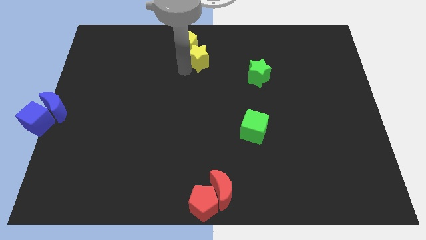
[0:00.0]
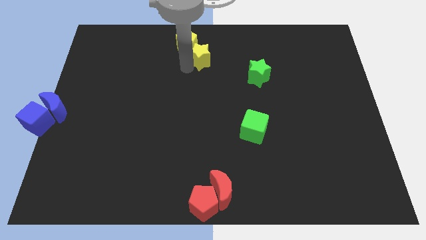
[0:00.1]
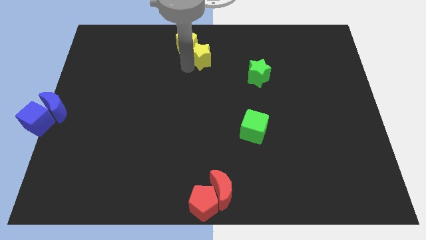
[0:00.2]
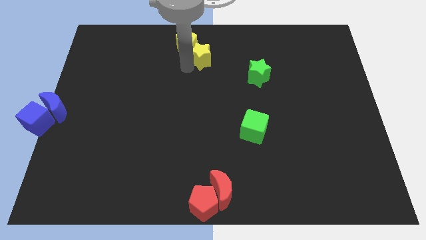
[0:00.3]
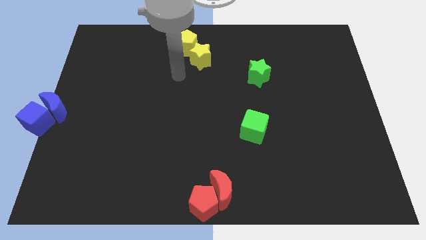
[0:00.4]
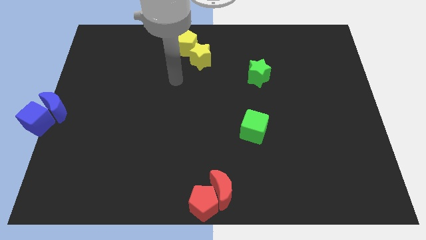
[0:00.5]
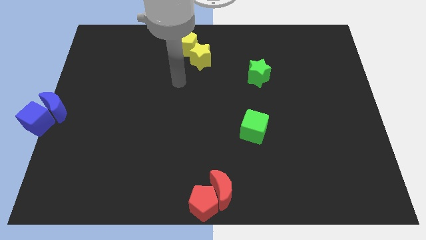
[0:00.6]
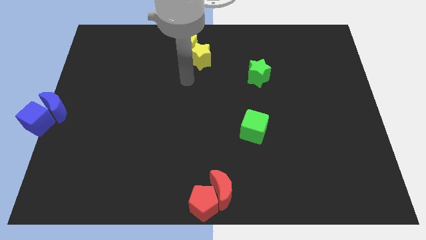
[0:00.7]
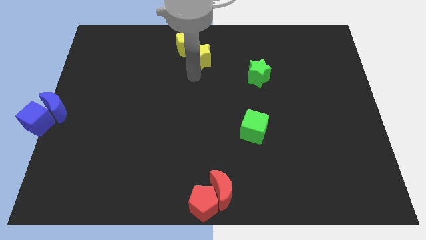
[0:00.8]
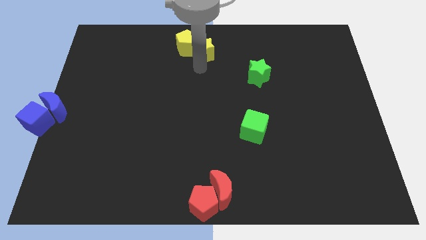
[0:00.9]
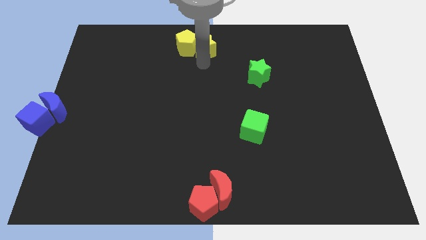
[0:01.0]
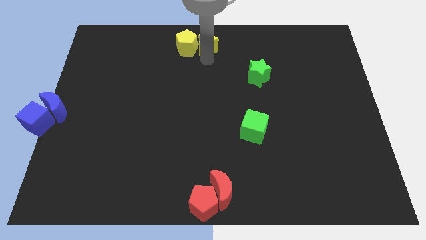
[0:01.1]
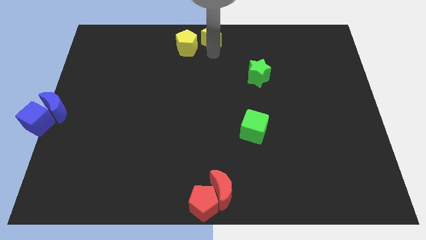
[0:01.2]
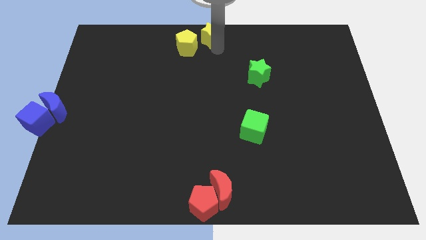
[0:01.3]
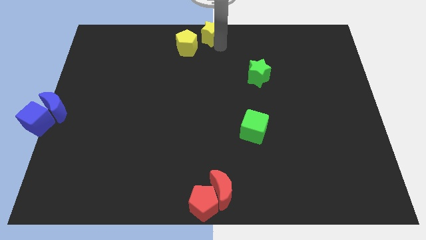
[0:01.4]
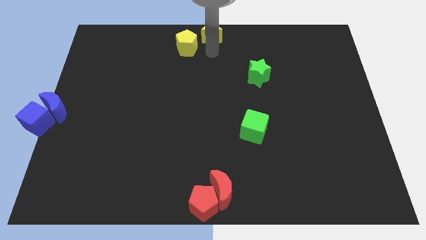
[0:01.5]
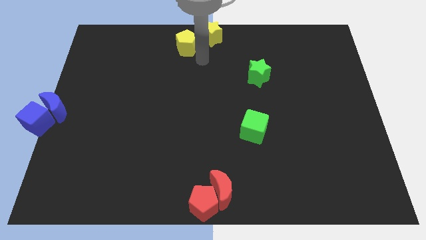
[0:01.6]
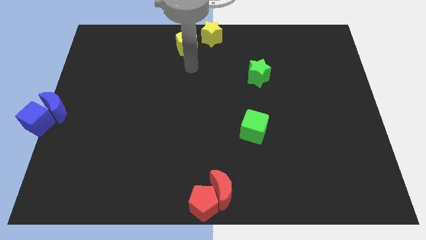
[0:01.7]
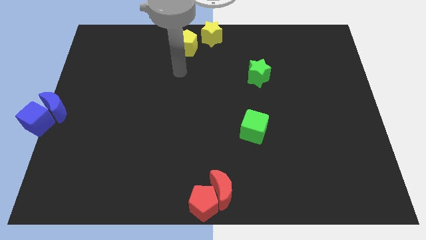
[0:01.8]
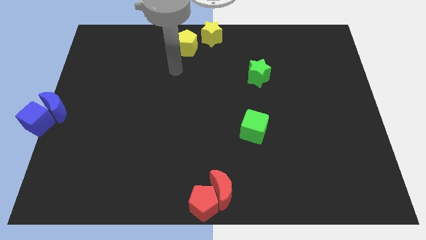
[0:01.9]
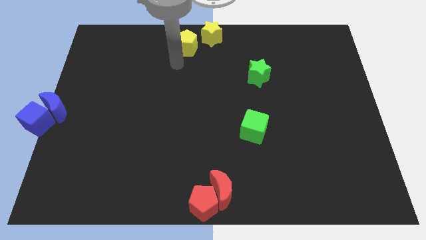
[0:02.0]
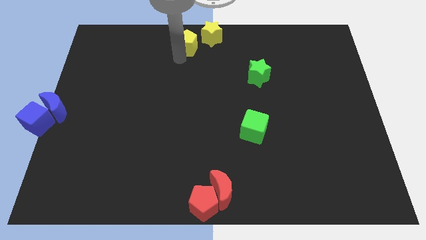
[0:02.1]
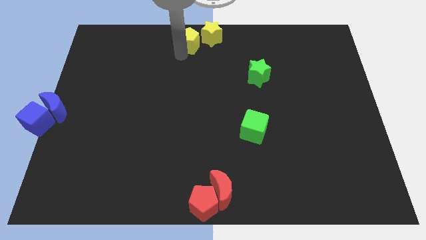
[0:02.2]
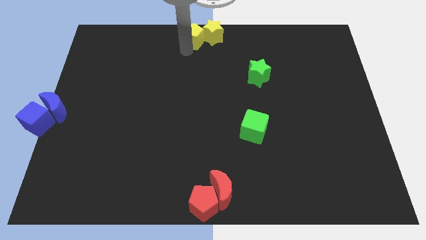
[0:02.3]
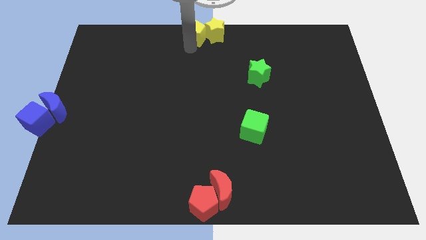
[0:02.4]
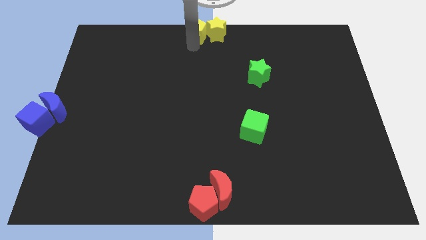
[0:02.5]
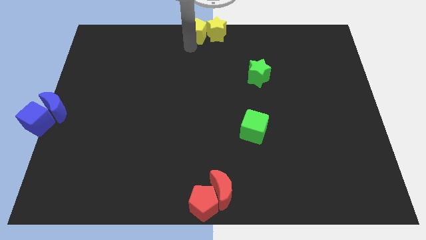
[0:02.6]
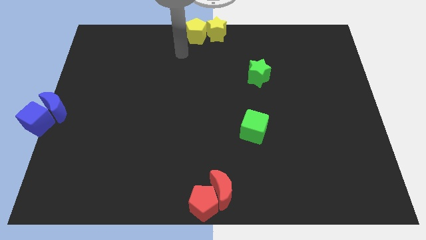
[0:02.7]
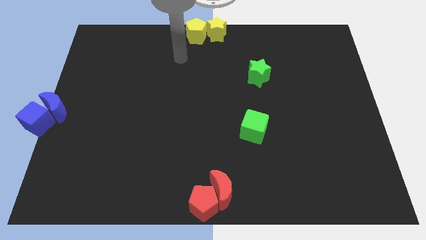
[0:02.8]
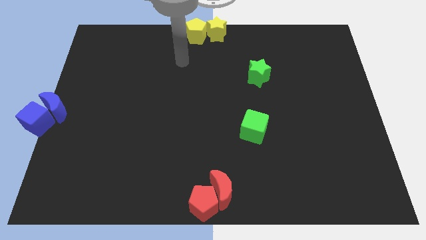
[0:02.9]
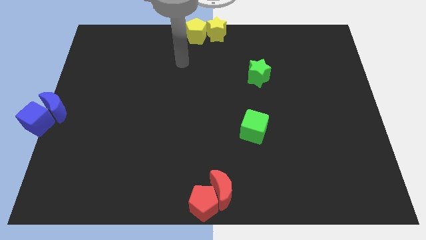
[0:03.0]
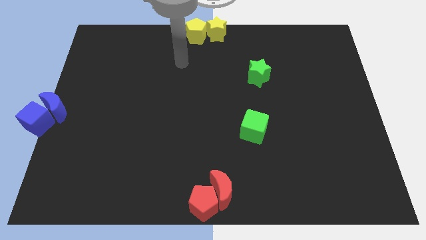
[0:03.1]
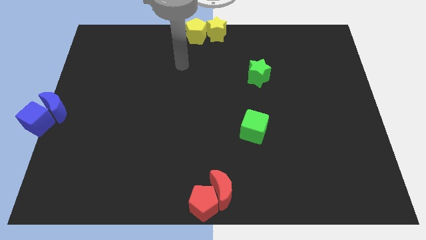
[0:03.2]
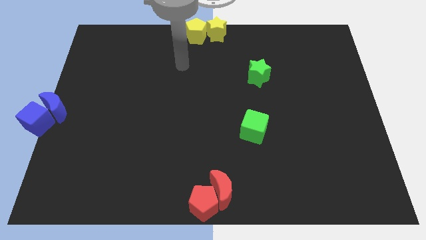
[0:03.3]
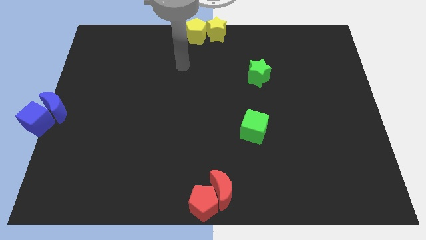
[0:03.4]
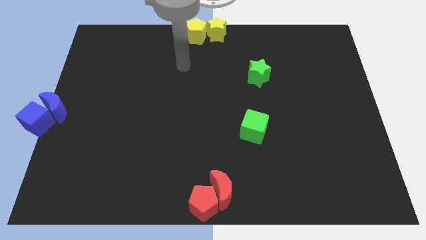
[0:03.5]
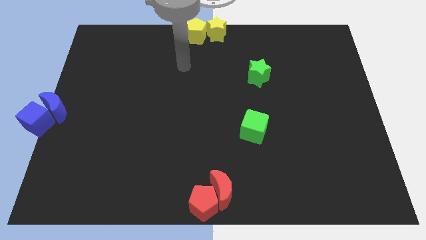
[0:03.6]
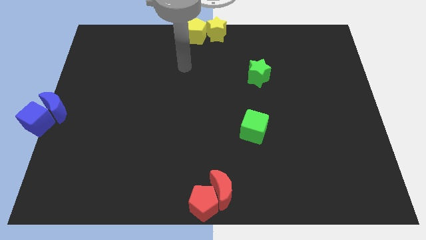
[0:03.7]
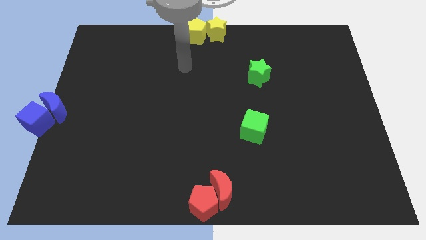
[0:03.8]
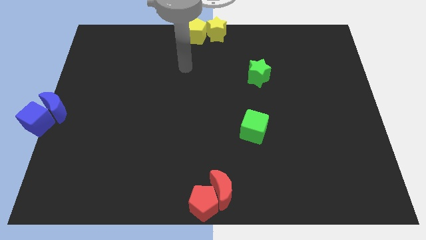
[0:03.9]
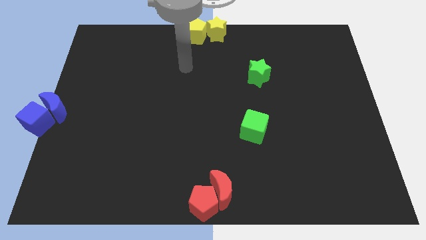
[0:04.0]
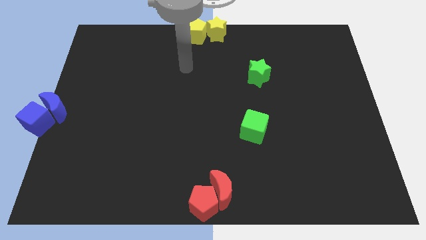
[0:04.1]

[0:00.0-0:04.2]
move the yellow blocks to the top center of the board

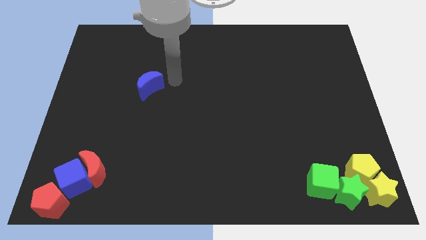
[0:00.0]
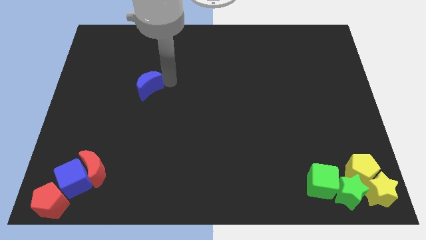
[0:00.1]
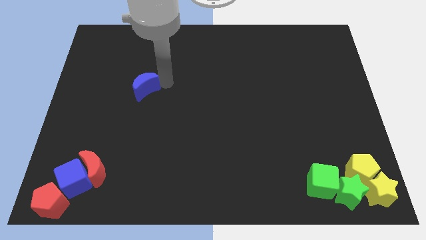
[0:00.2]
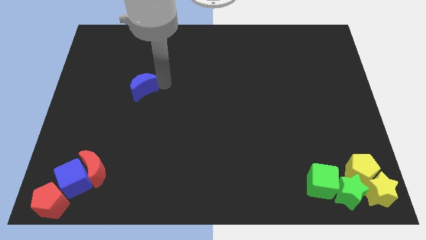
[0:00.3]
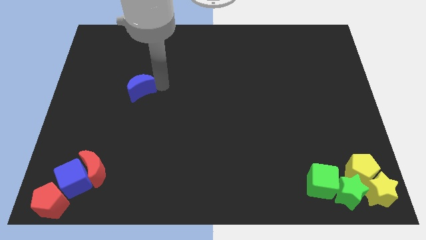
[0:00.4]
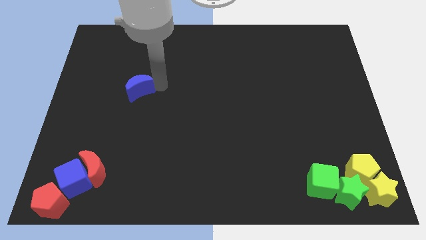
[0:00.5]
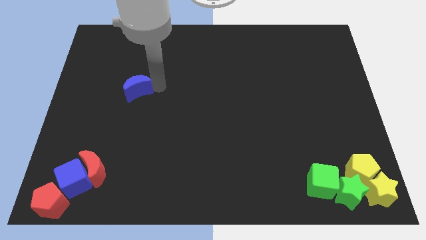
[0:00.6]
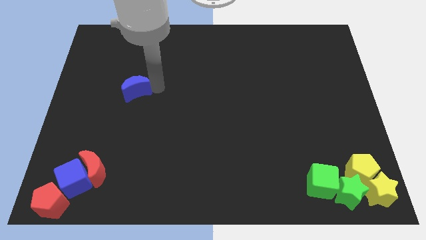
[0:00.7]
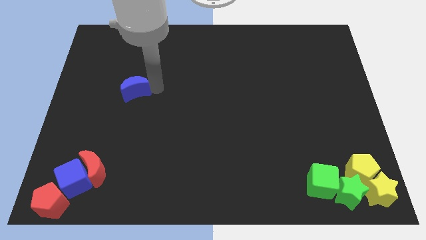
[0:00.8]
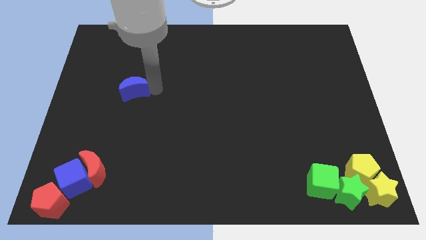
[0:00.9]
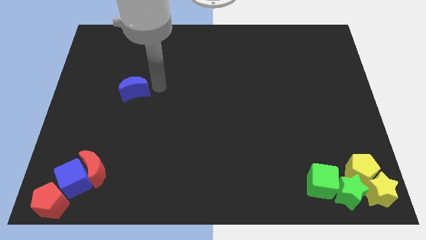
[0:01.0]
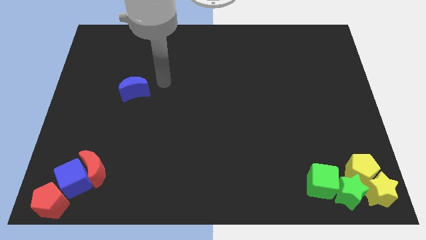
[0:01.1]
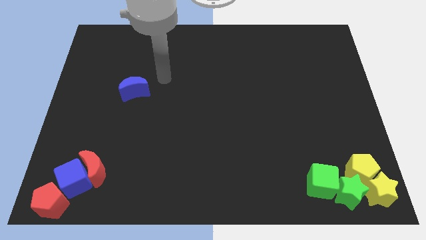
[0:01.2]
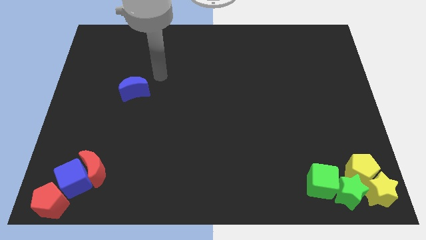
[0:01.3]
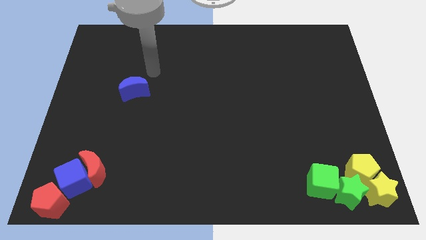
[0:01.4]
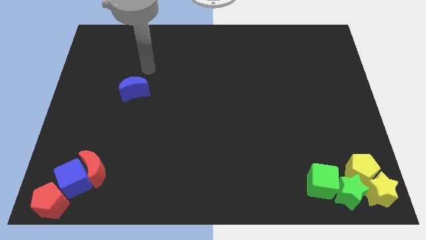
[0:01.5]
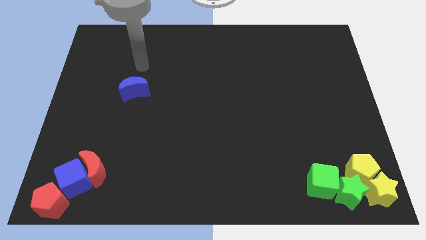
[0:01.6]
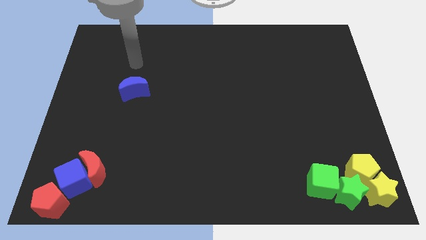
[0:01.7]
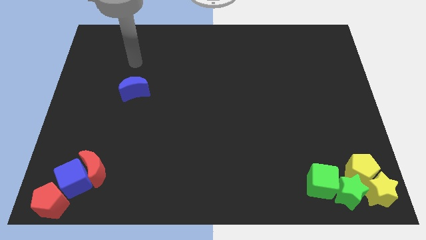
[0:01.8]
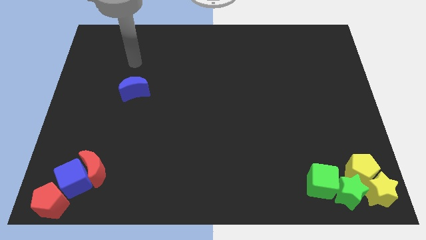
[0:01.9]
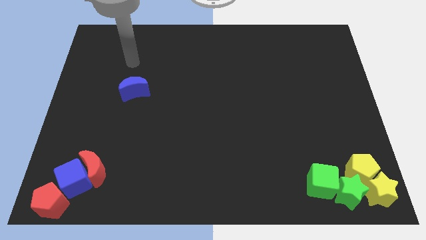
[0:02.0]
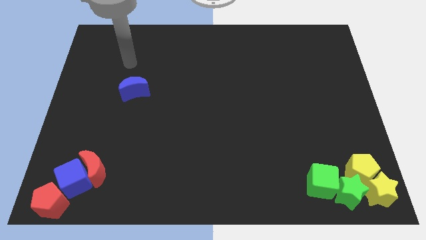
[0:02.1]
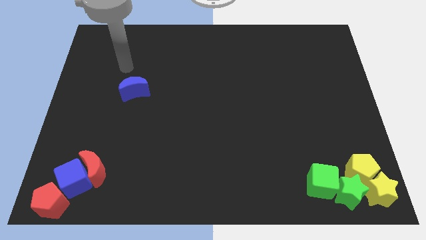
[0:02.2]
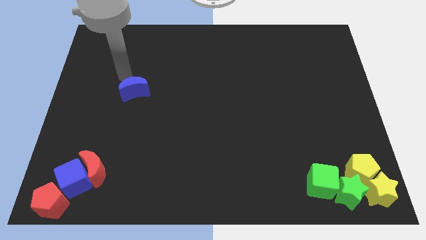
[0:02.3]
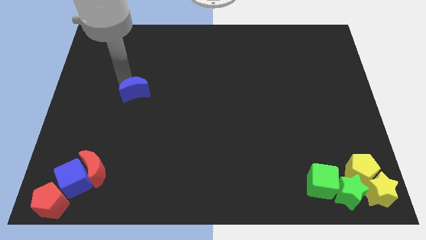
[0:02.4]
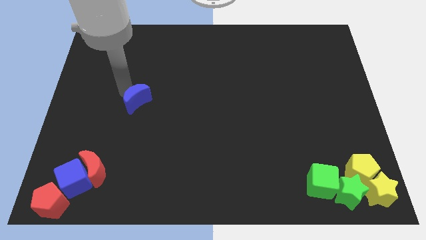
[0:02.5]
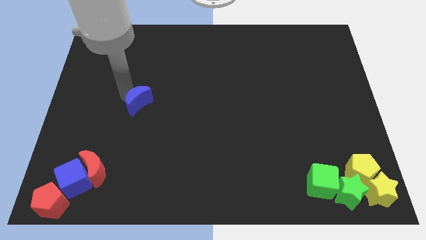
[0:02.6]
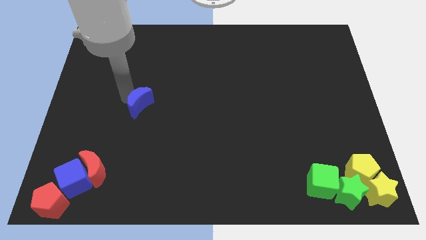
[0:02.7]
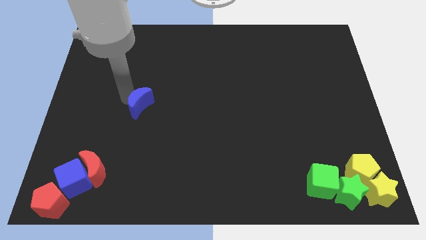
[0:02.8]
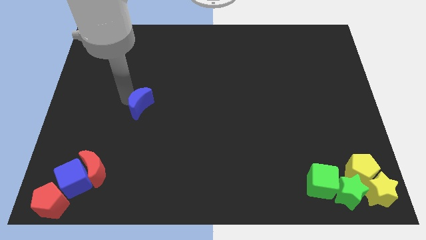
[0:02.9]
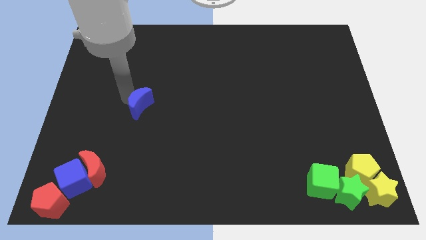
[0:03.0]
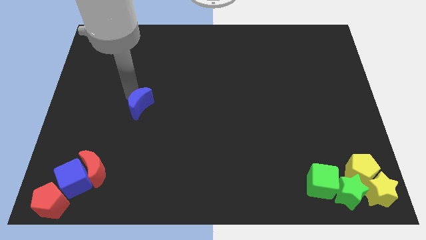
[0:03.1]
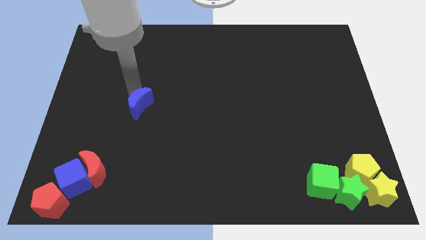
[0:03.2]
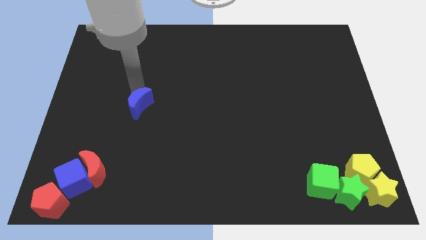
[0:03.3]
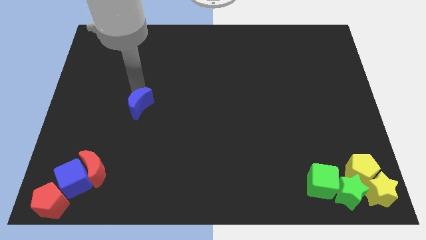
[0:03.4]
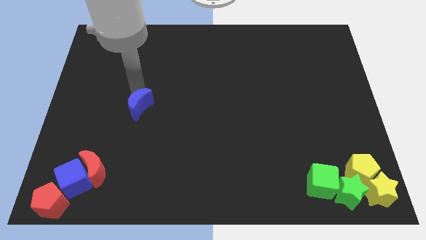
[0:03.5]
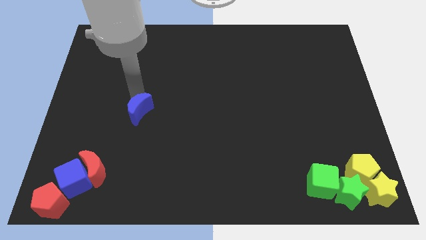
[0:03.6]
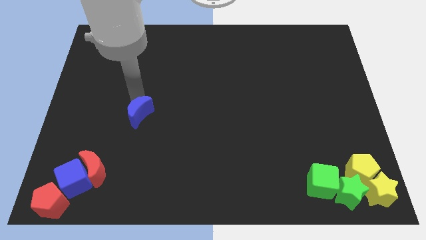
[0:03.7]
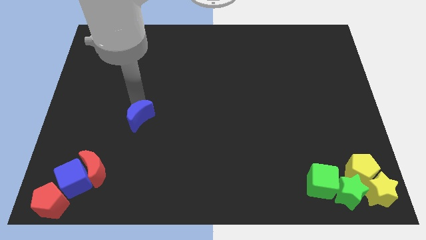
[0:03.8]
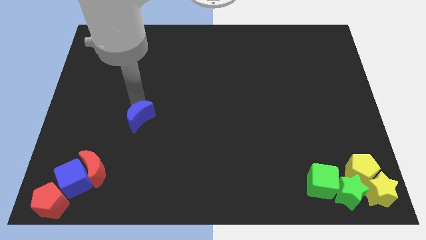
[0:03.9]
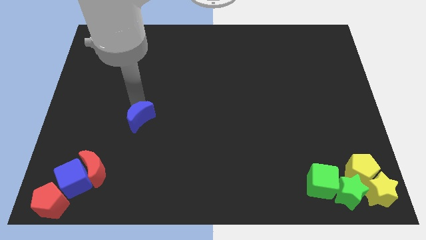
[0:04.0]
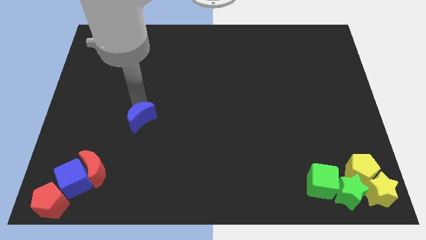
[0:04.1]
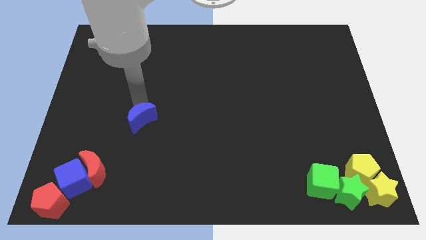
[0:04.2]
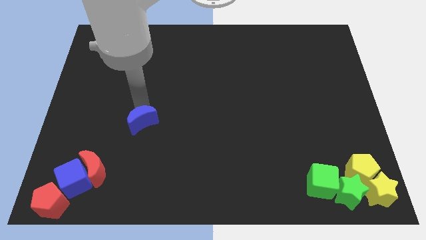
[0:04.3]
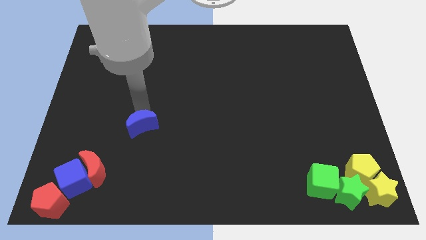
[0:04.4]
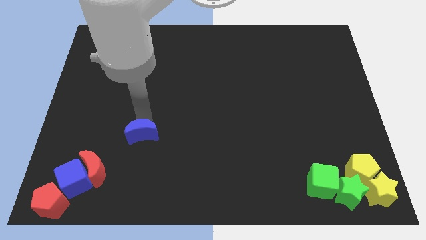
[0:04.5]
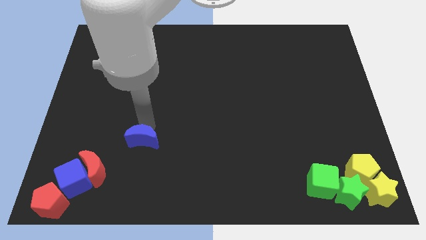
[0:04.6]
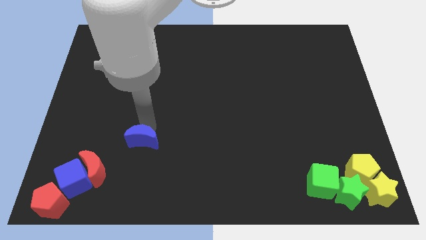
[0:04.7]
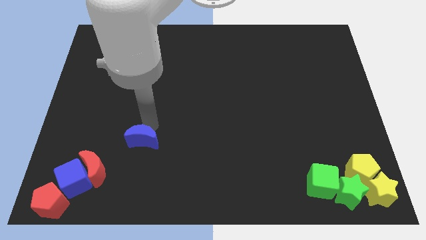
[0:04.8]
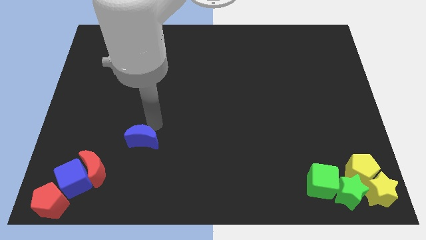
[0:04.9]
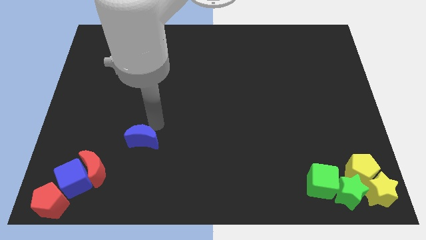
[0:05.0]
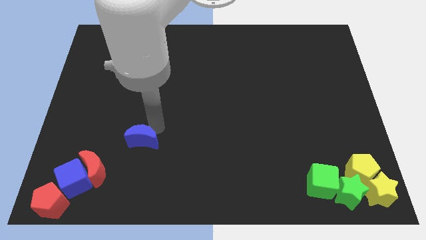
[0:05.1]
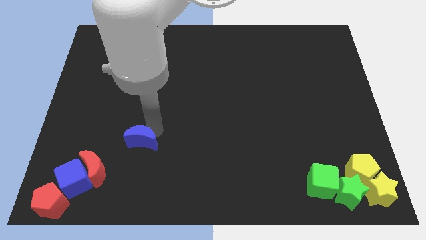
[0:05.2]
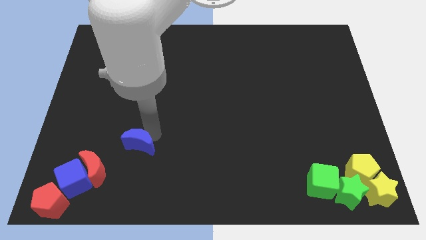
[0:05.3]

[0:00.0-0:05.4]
push the blue moon towards the red crescent
